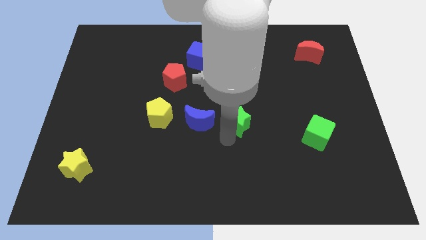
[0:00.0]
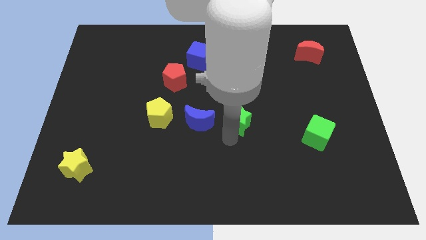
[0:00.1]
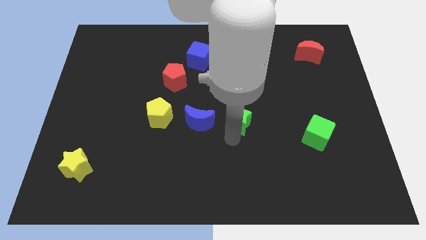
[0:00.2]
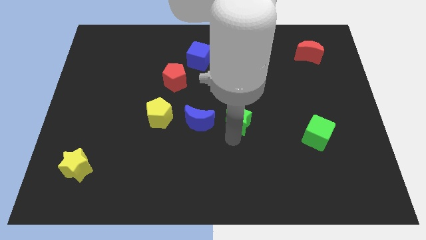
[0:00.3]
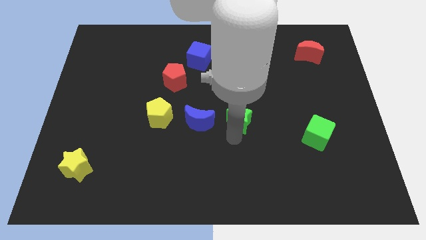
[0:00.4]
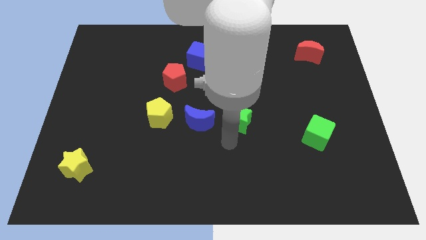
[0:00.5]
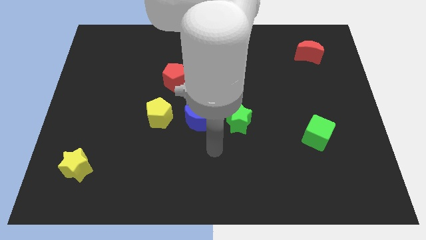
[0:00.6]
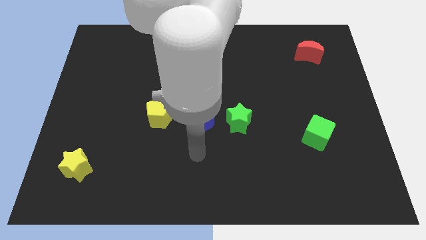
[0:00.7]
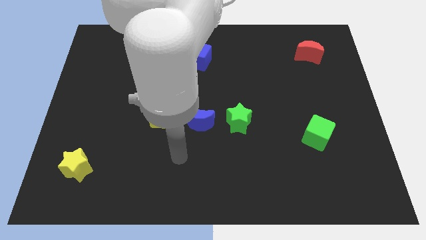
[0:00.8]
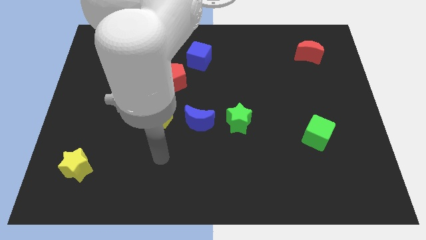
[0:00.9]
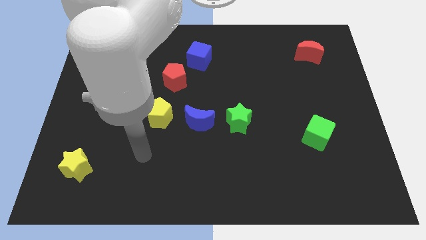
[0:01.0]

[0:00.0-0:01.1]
slide the green star up slightly

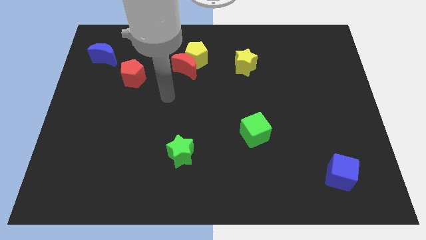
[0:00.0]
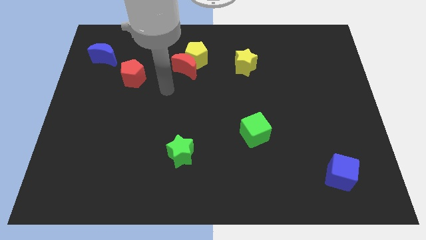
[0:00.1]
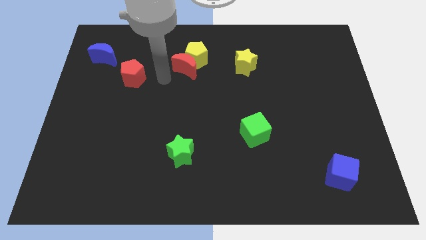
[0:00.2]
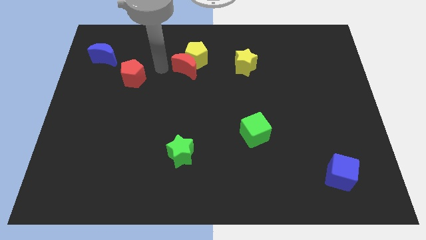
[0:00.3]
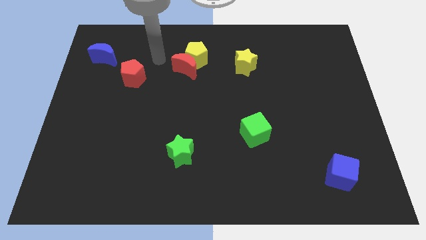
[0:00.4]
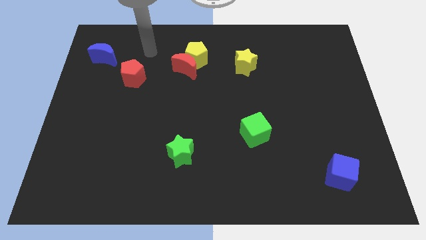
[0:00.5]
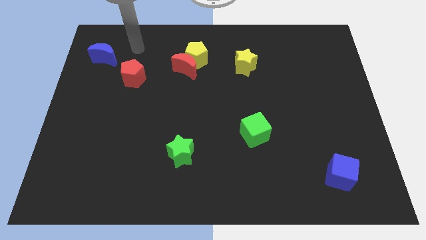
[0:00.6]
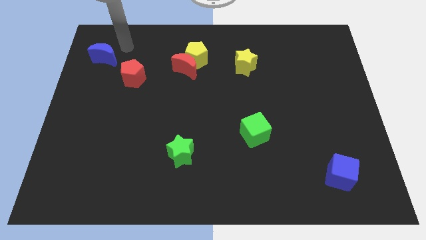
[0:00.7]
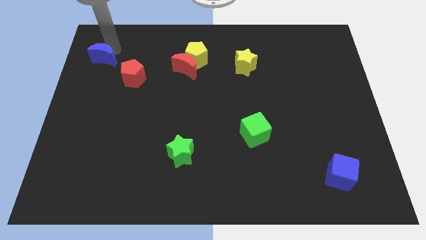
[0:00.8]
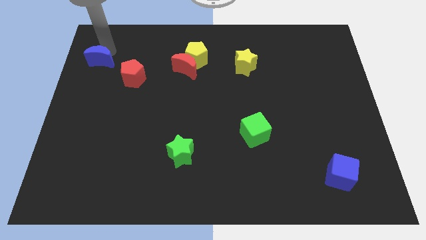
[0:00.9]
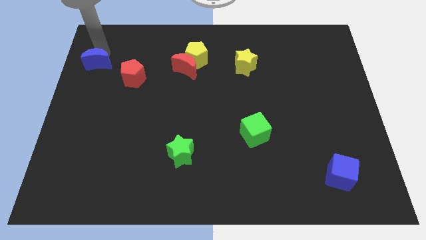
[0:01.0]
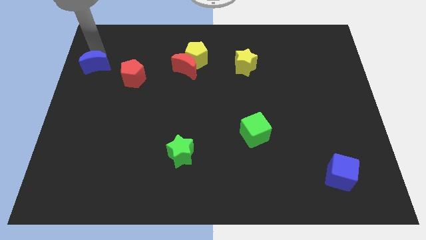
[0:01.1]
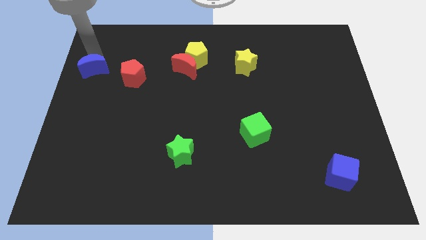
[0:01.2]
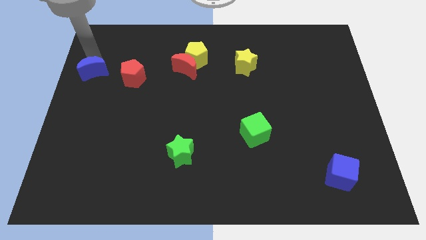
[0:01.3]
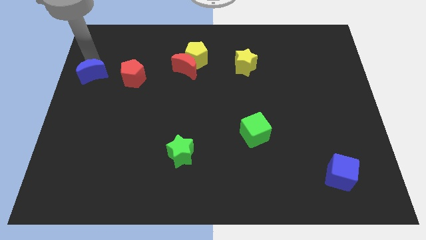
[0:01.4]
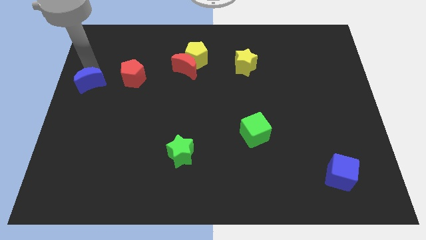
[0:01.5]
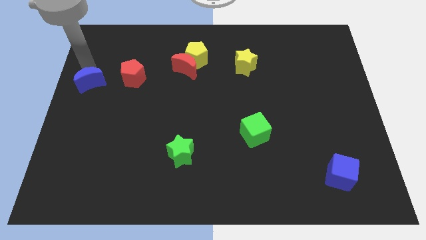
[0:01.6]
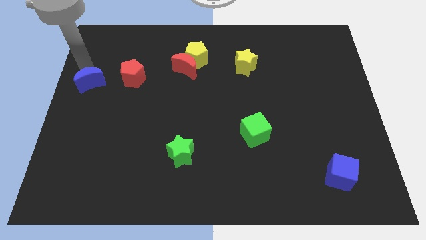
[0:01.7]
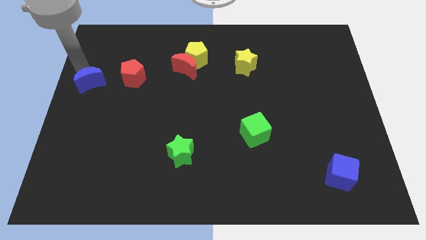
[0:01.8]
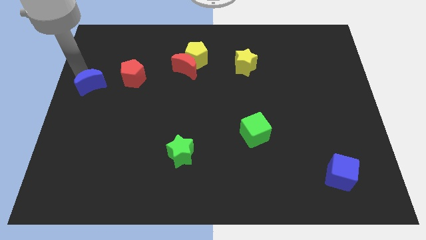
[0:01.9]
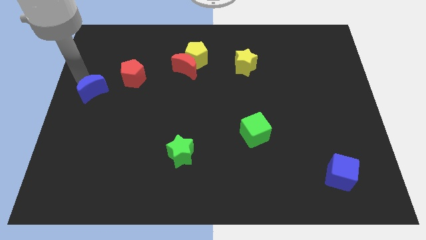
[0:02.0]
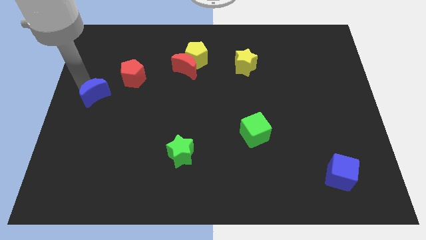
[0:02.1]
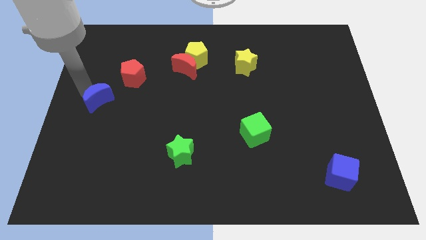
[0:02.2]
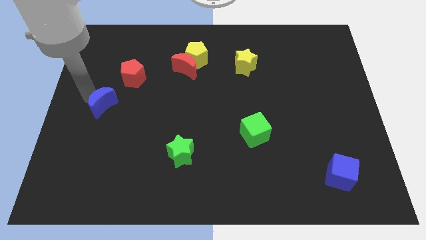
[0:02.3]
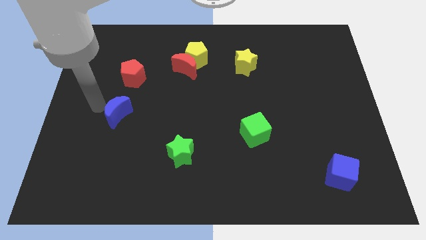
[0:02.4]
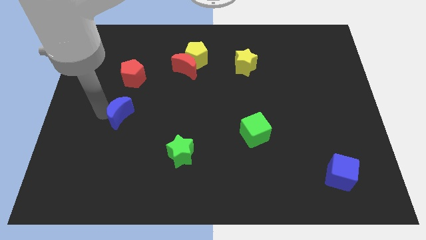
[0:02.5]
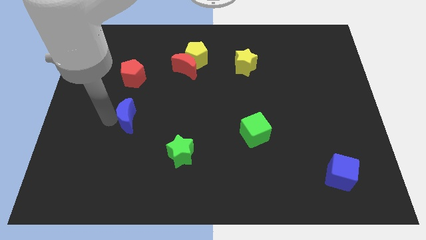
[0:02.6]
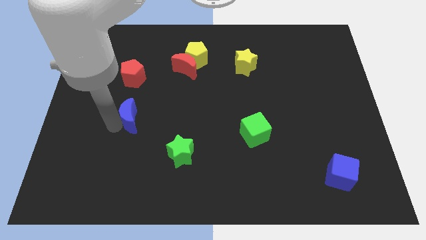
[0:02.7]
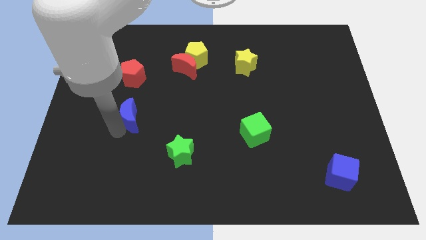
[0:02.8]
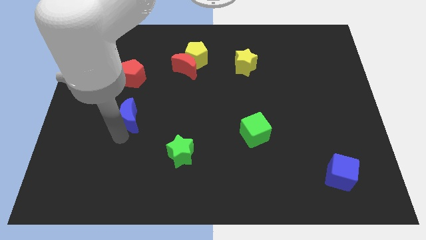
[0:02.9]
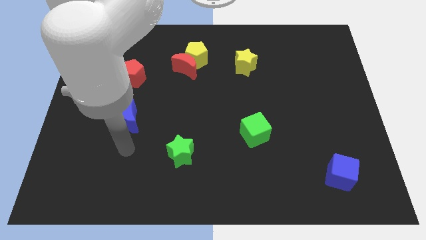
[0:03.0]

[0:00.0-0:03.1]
place the blue moon below the red pentagon

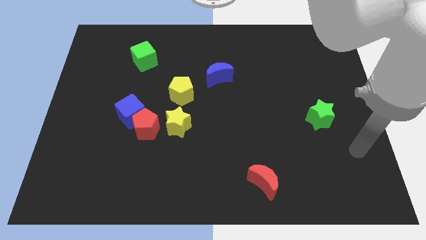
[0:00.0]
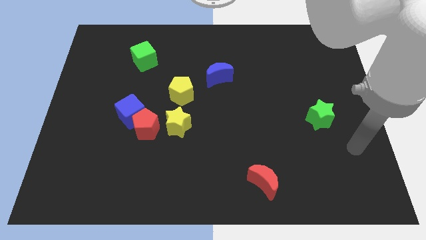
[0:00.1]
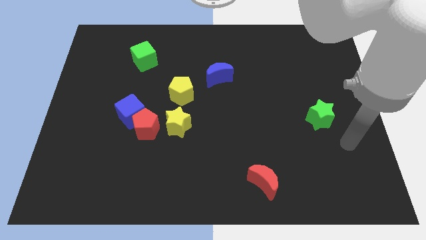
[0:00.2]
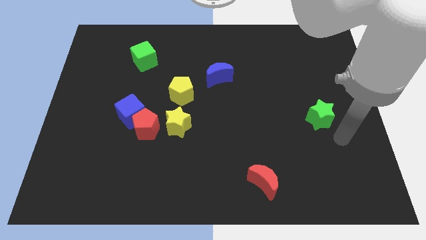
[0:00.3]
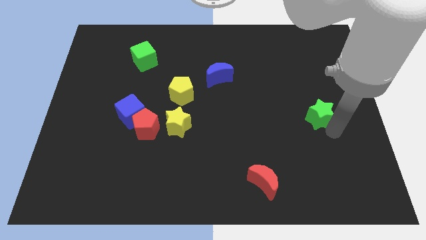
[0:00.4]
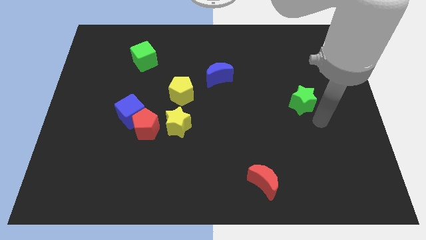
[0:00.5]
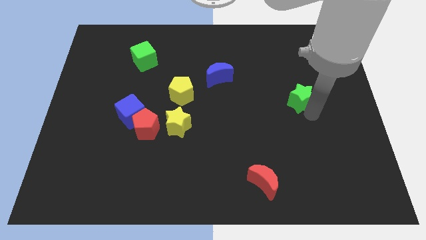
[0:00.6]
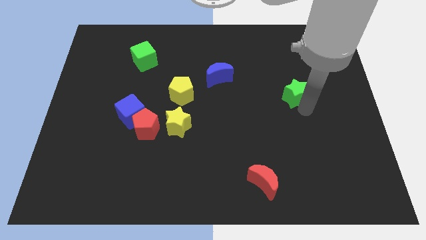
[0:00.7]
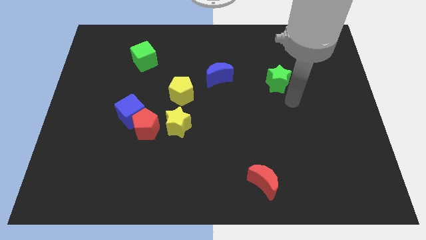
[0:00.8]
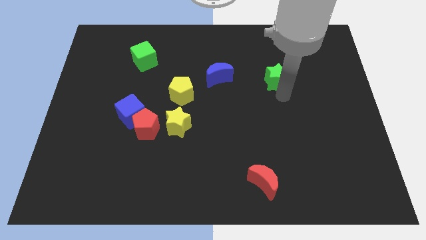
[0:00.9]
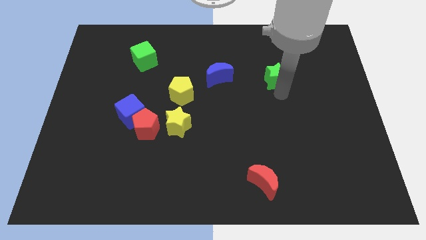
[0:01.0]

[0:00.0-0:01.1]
put the green star parallel right to the blue moon

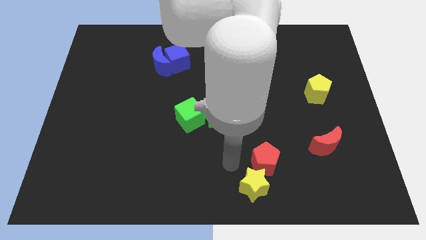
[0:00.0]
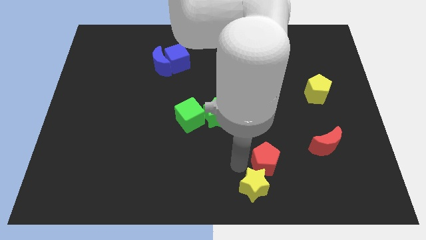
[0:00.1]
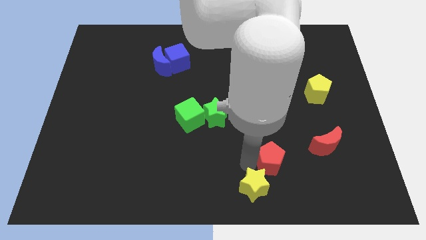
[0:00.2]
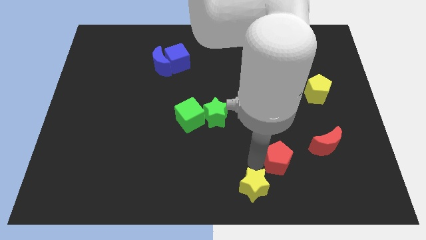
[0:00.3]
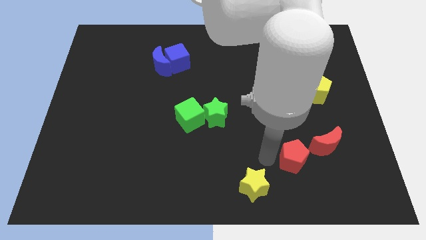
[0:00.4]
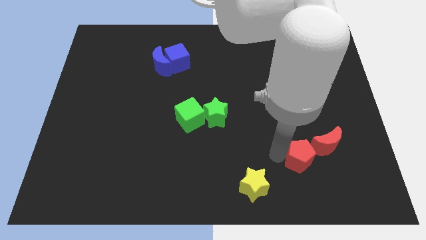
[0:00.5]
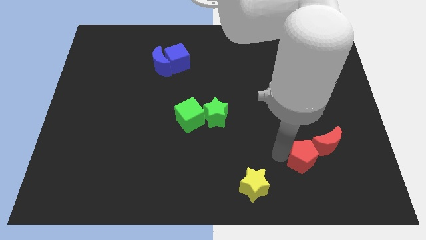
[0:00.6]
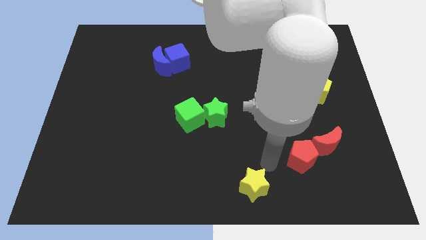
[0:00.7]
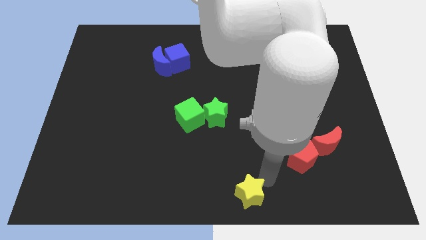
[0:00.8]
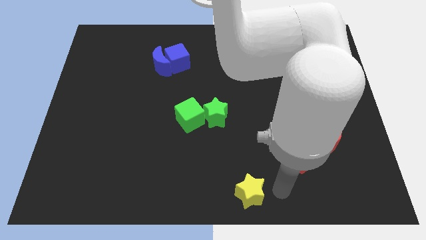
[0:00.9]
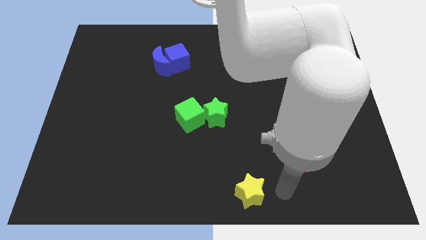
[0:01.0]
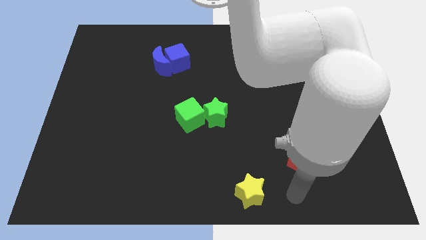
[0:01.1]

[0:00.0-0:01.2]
place the red pentagon diagonal to the red crescent at the bottom left side

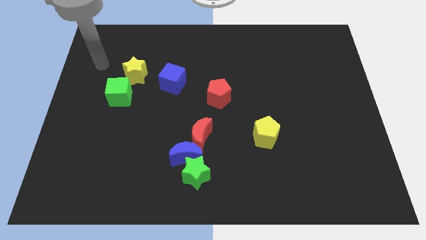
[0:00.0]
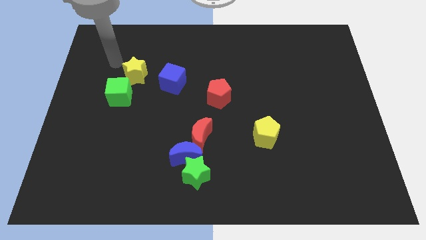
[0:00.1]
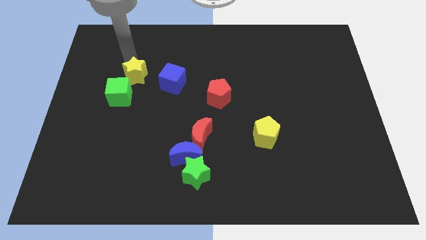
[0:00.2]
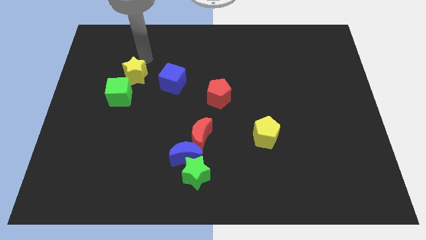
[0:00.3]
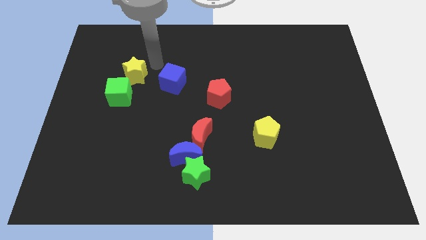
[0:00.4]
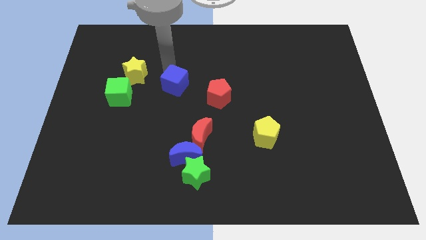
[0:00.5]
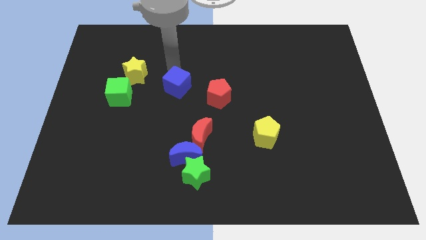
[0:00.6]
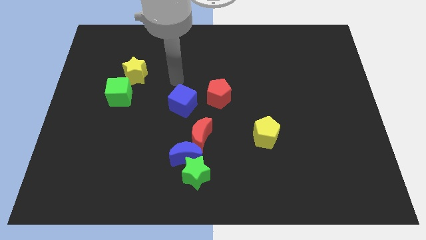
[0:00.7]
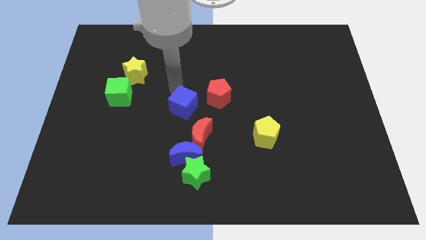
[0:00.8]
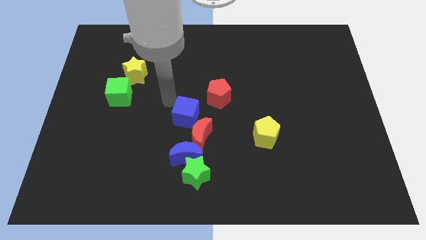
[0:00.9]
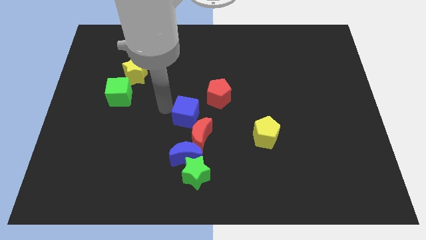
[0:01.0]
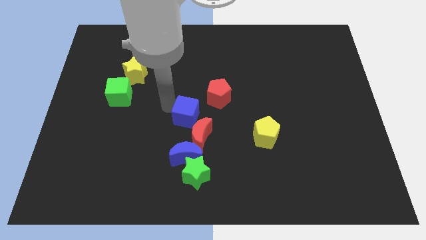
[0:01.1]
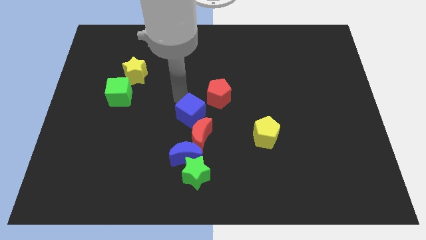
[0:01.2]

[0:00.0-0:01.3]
move the blue cube to the bottom of the board

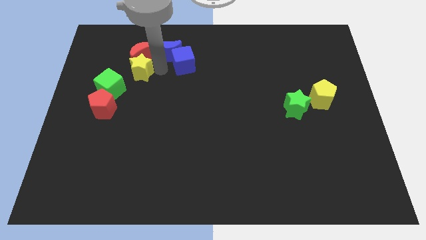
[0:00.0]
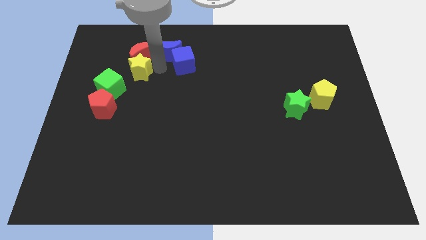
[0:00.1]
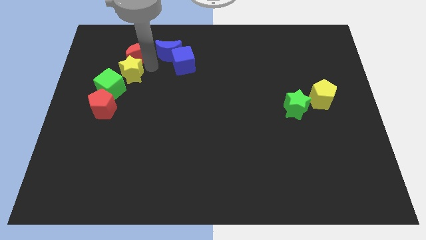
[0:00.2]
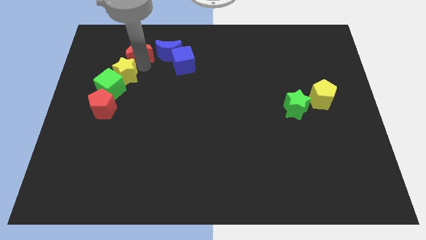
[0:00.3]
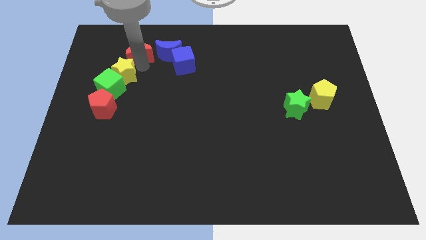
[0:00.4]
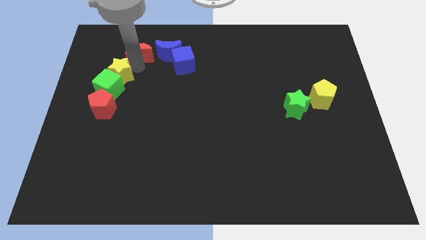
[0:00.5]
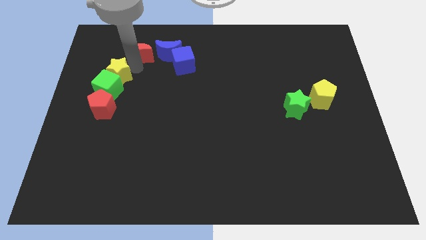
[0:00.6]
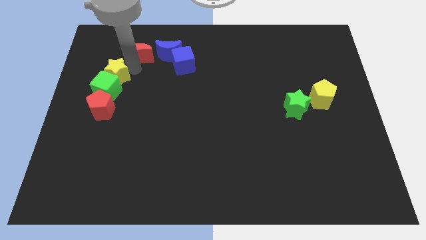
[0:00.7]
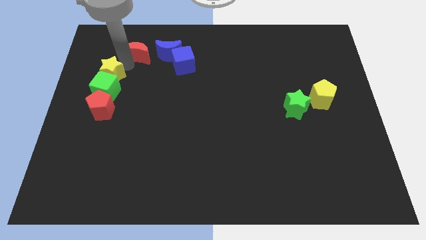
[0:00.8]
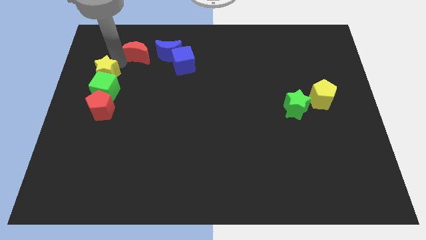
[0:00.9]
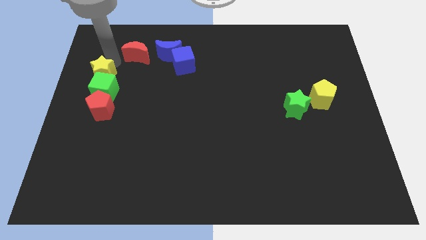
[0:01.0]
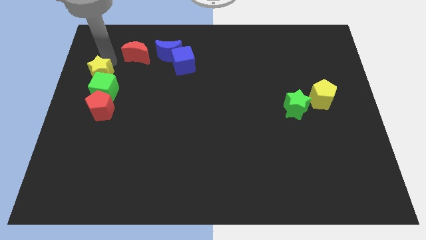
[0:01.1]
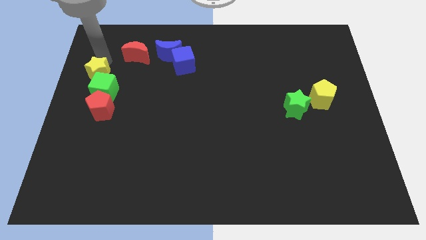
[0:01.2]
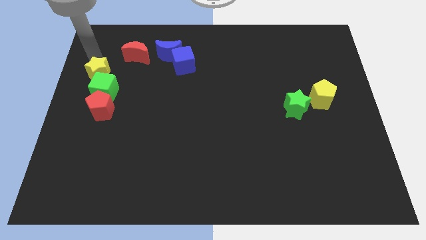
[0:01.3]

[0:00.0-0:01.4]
push the yellow star to the left
